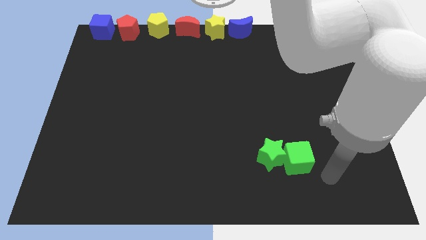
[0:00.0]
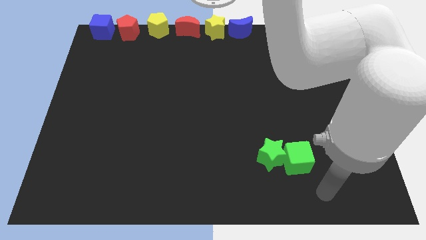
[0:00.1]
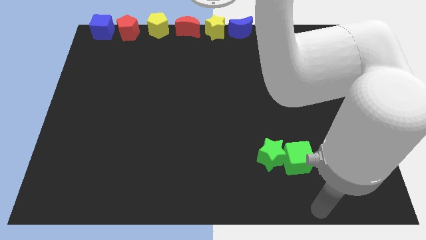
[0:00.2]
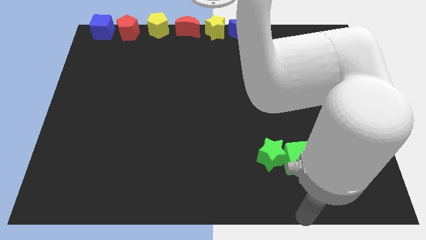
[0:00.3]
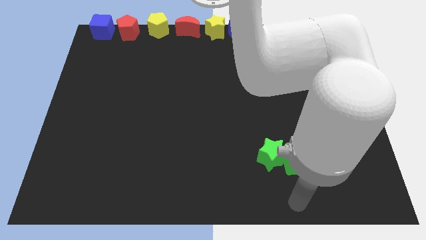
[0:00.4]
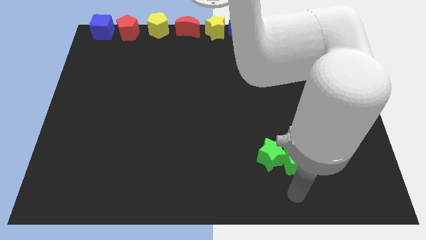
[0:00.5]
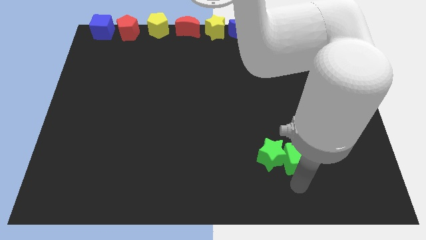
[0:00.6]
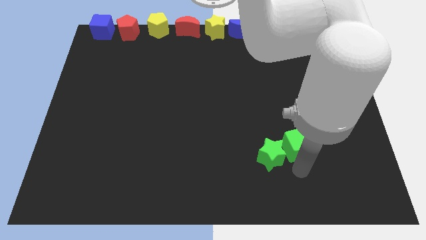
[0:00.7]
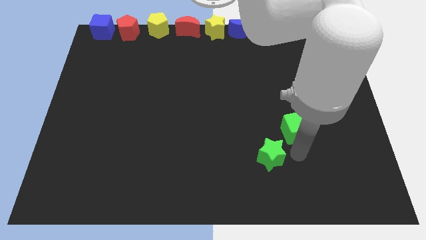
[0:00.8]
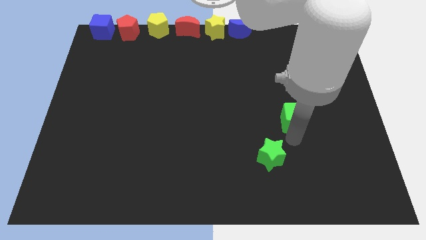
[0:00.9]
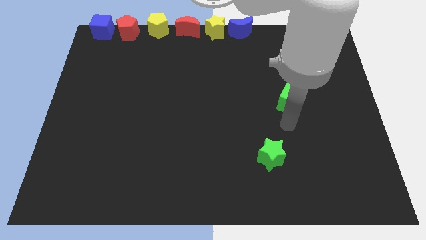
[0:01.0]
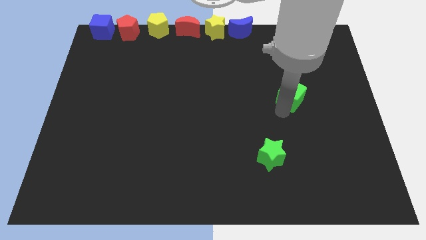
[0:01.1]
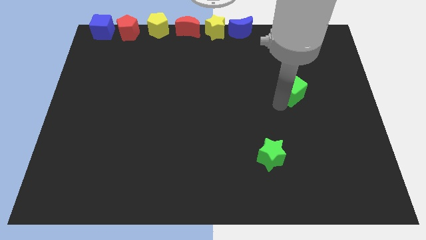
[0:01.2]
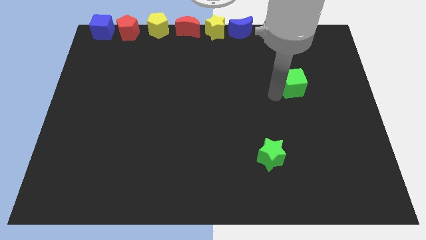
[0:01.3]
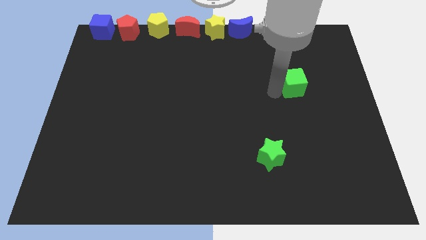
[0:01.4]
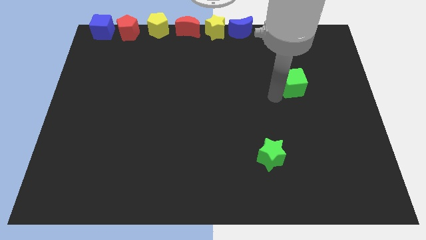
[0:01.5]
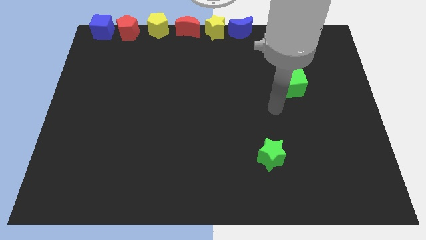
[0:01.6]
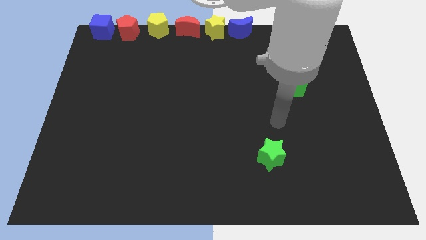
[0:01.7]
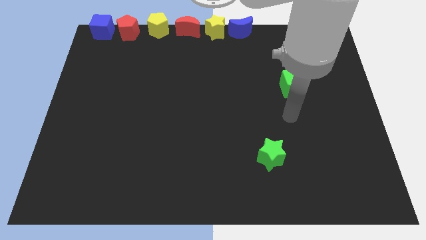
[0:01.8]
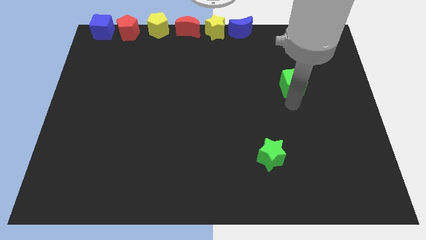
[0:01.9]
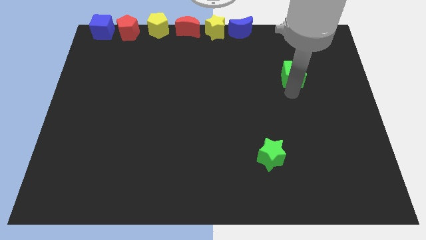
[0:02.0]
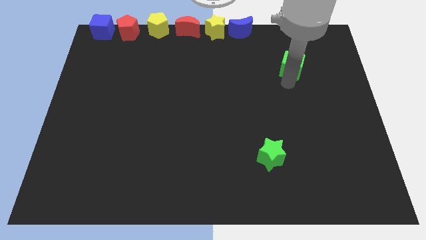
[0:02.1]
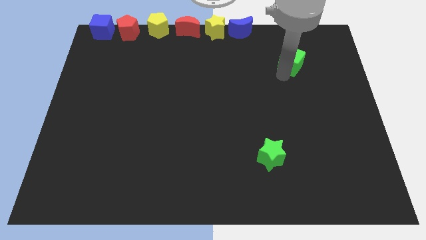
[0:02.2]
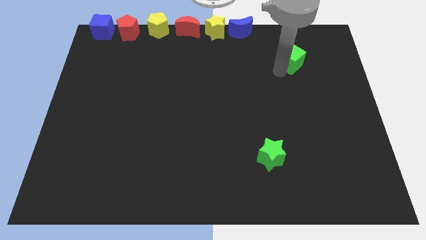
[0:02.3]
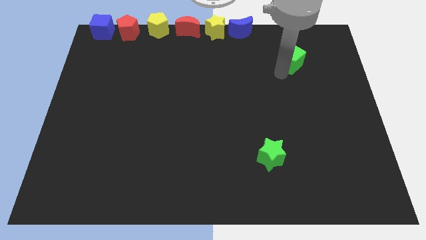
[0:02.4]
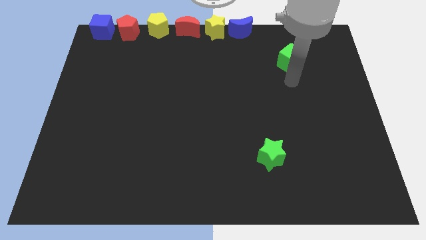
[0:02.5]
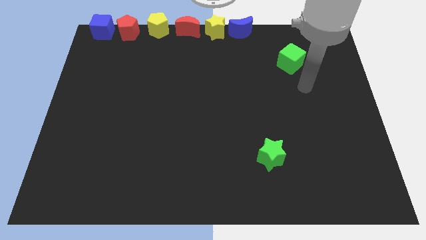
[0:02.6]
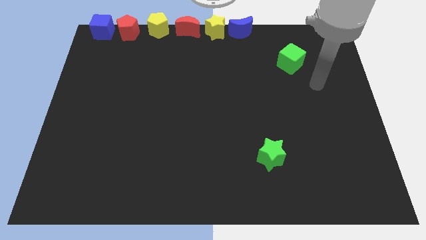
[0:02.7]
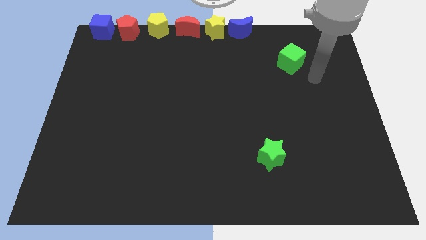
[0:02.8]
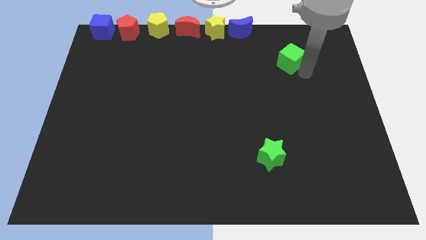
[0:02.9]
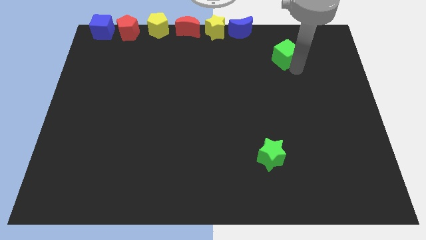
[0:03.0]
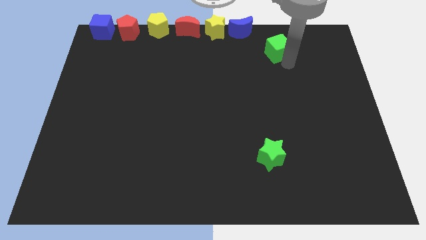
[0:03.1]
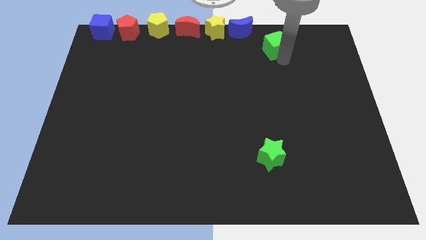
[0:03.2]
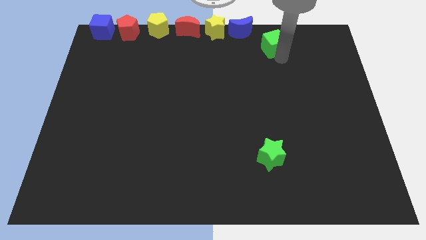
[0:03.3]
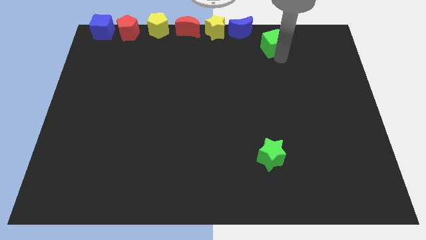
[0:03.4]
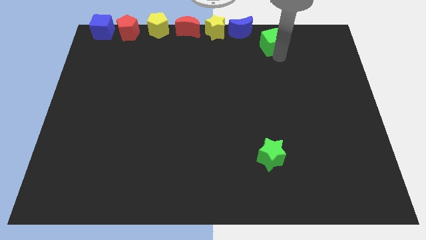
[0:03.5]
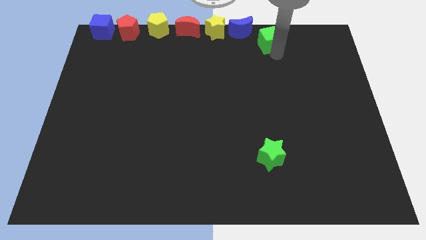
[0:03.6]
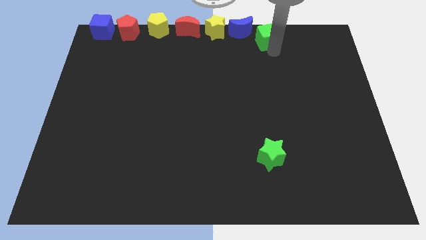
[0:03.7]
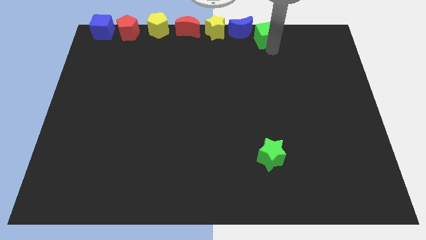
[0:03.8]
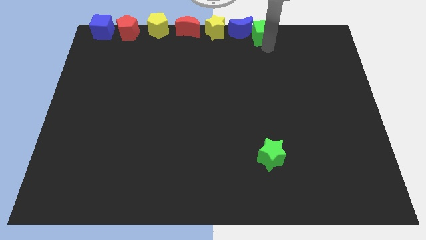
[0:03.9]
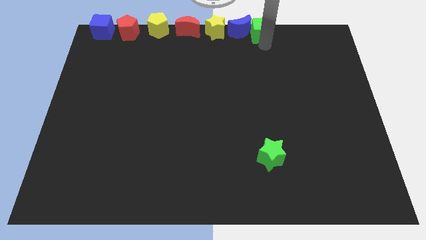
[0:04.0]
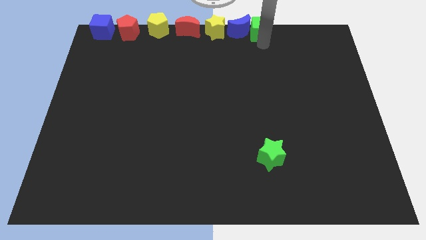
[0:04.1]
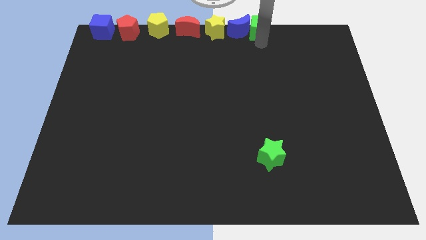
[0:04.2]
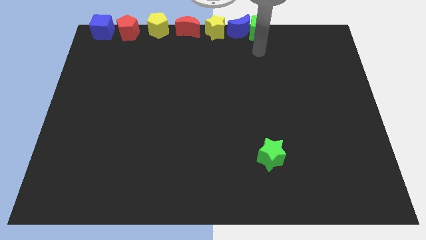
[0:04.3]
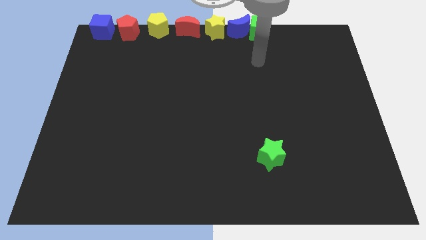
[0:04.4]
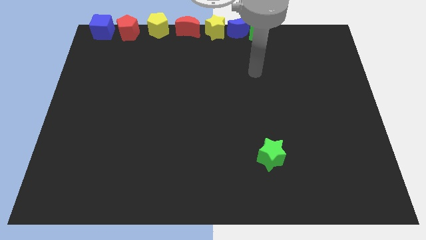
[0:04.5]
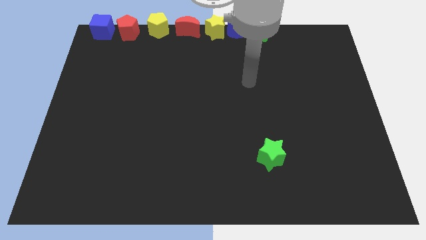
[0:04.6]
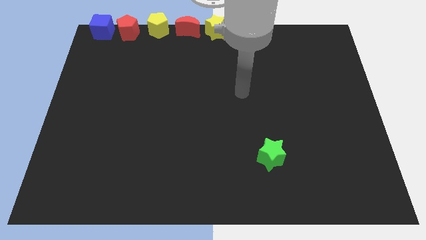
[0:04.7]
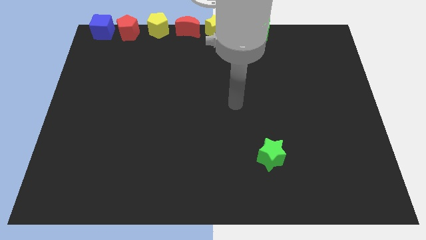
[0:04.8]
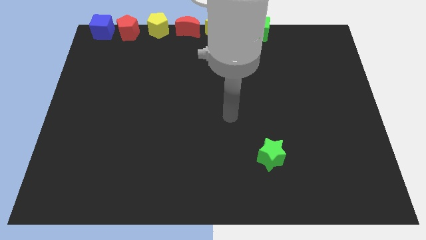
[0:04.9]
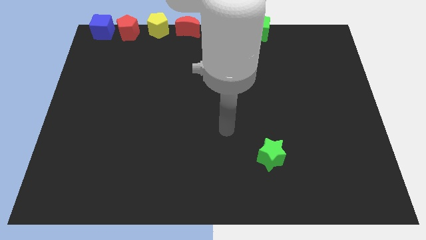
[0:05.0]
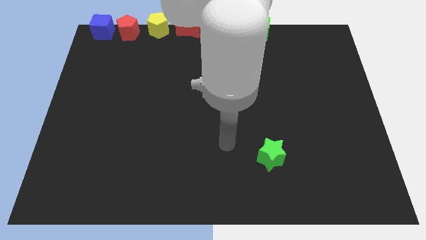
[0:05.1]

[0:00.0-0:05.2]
place the green cube right to the blue crescent

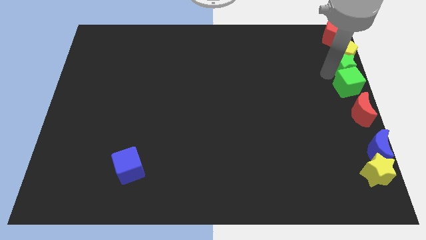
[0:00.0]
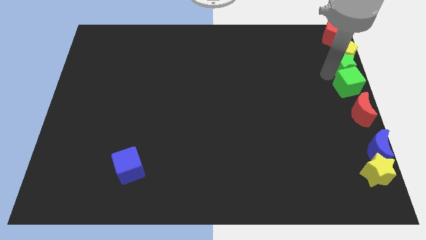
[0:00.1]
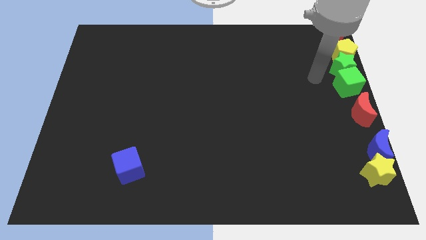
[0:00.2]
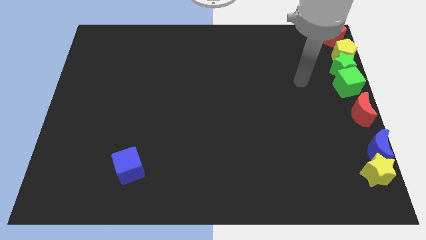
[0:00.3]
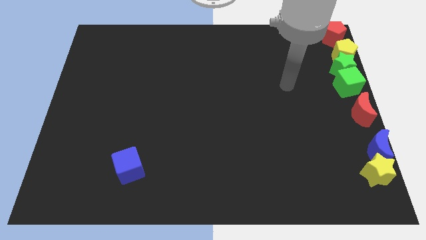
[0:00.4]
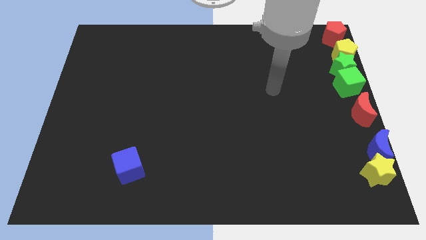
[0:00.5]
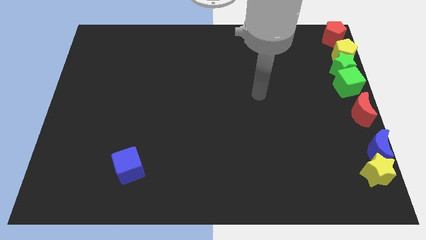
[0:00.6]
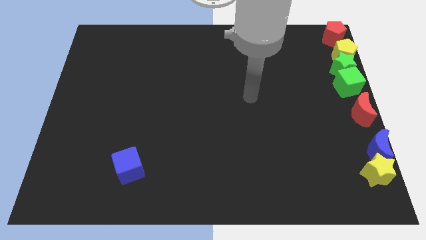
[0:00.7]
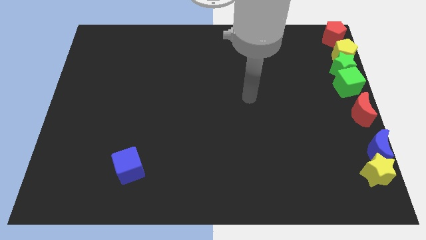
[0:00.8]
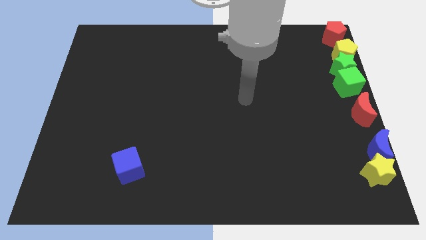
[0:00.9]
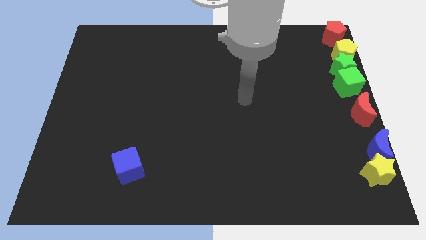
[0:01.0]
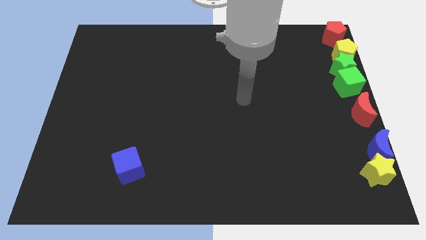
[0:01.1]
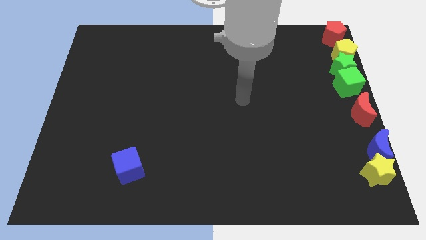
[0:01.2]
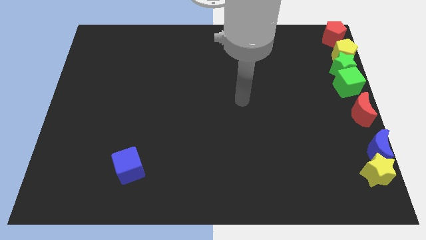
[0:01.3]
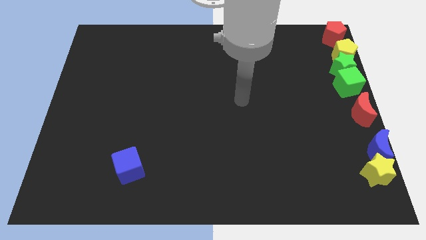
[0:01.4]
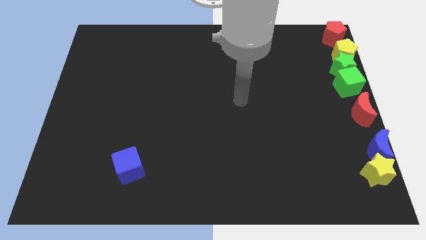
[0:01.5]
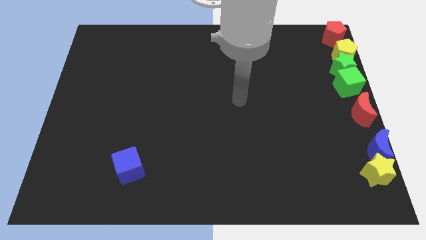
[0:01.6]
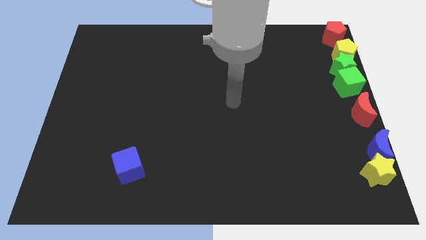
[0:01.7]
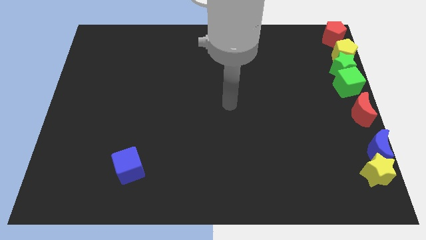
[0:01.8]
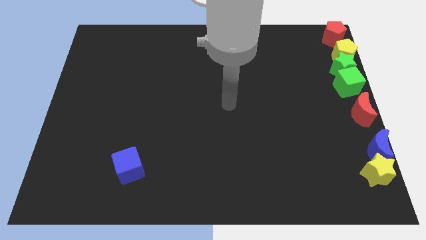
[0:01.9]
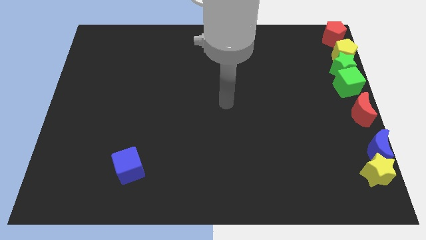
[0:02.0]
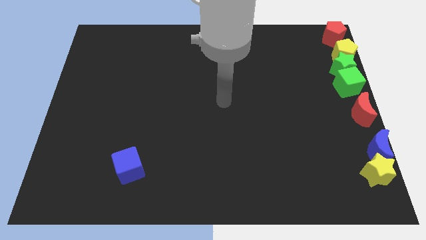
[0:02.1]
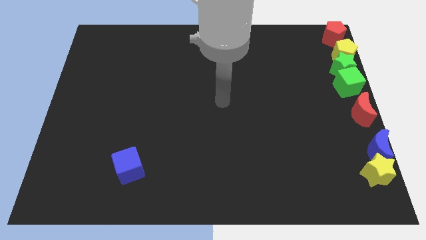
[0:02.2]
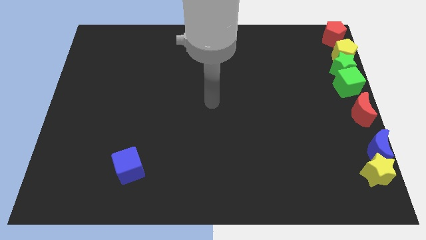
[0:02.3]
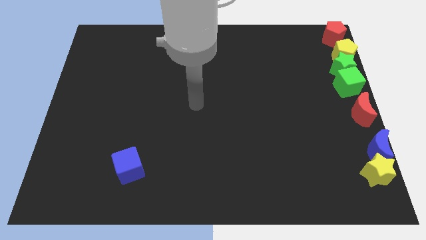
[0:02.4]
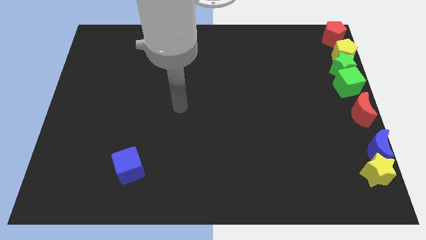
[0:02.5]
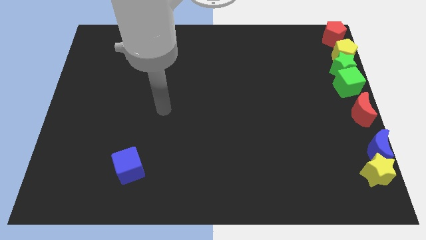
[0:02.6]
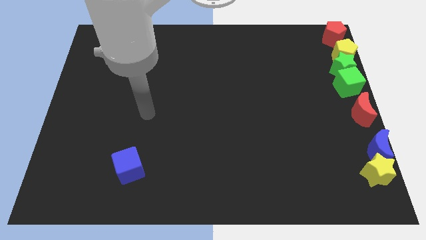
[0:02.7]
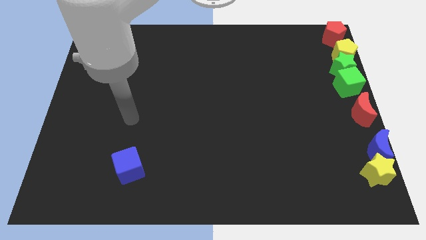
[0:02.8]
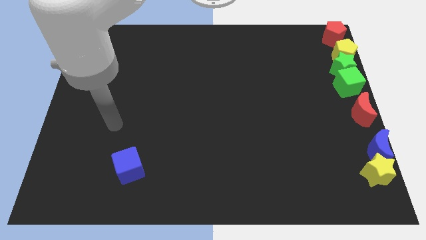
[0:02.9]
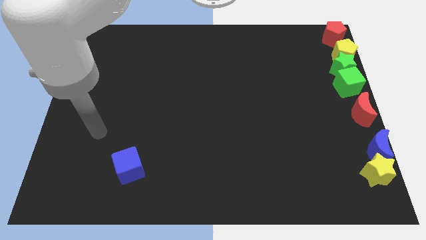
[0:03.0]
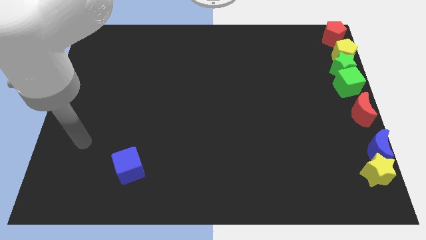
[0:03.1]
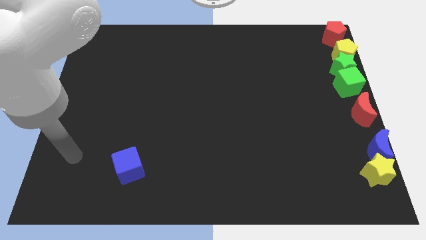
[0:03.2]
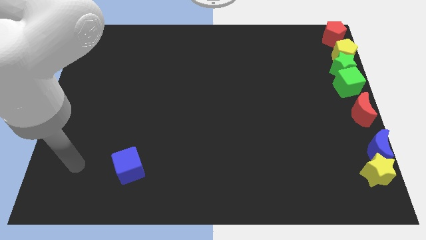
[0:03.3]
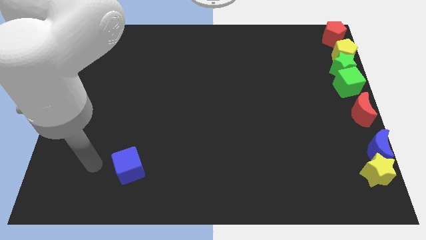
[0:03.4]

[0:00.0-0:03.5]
move your arm away from the green star

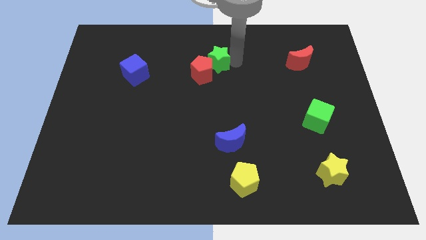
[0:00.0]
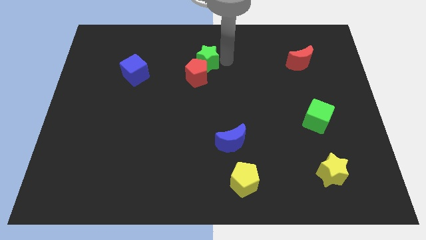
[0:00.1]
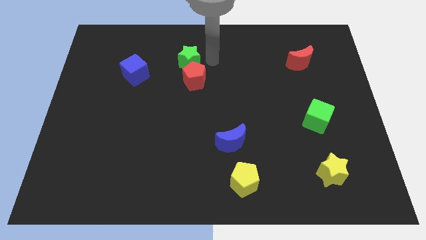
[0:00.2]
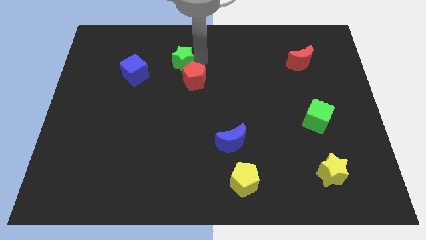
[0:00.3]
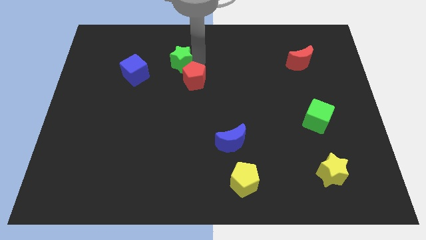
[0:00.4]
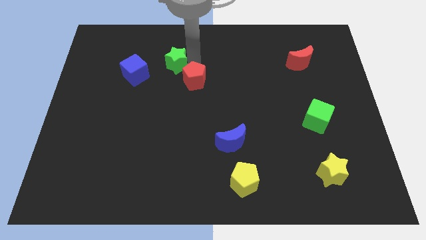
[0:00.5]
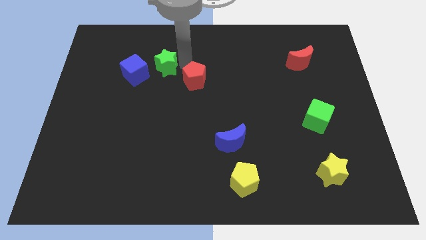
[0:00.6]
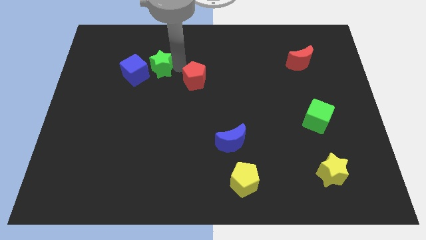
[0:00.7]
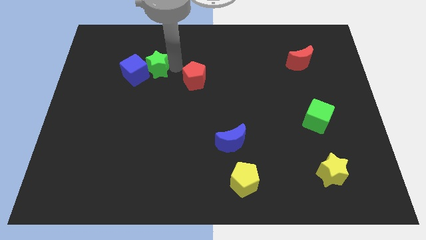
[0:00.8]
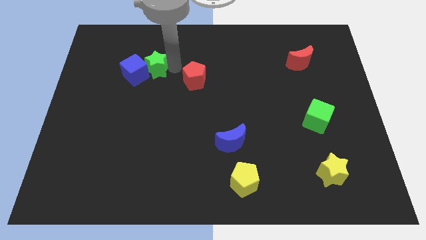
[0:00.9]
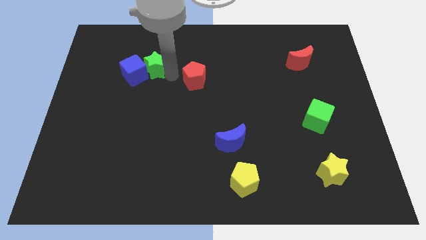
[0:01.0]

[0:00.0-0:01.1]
push the green star into the right side of the blue cube
